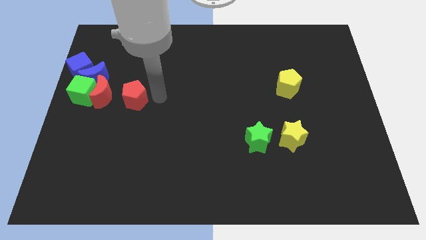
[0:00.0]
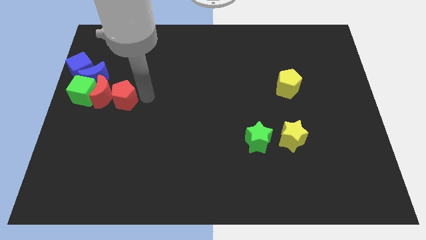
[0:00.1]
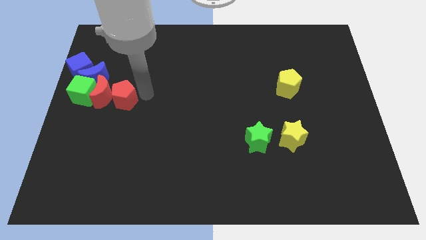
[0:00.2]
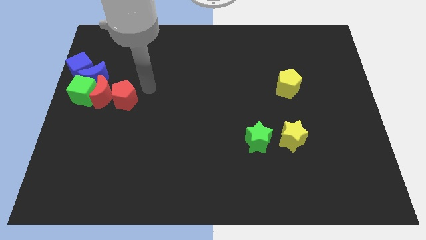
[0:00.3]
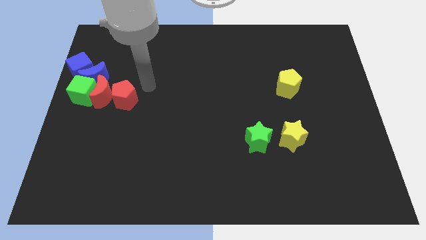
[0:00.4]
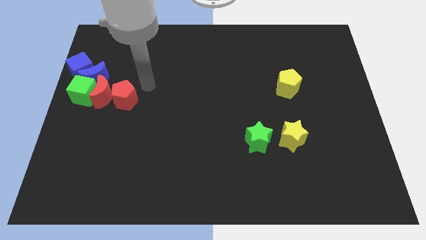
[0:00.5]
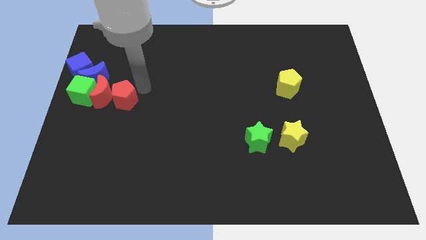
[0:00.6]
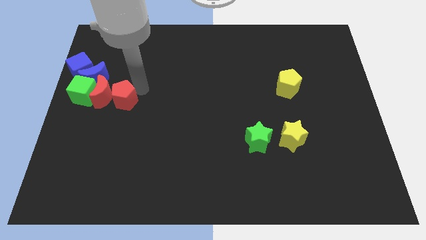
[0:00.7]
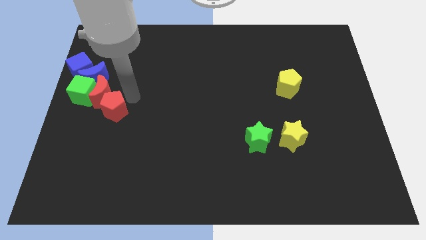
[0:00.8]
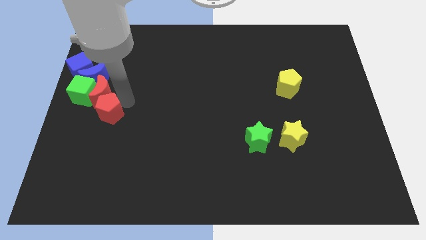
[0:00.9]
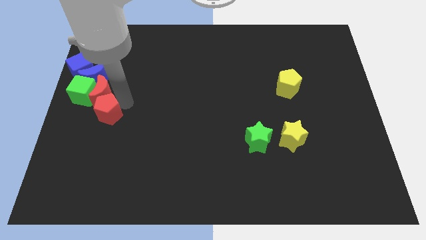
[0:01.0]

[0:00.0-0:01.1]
push the red pentagon into the red moon

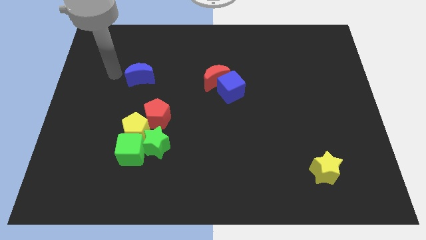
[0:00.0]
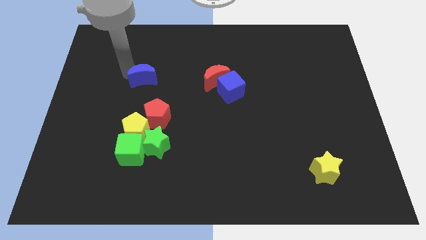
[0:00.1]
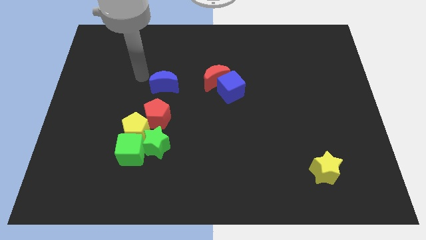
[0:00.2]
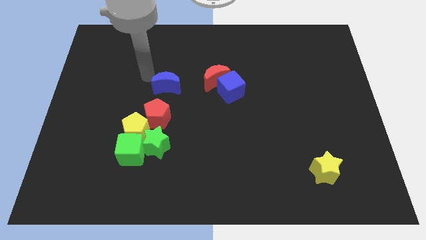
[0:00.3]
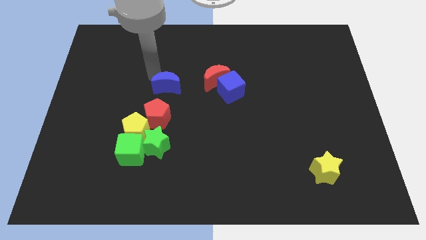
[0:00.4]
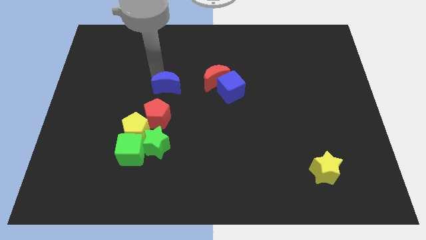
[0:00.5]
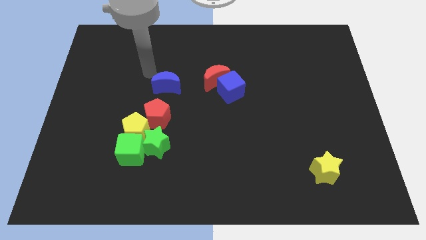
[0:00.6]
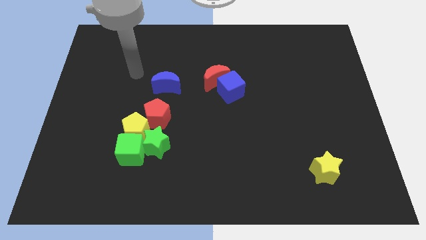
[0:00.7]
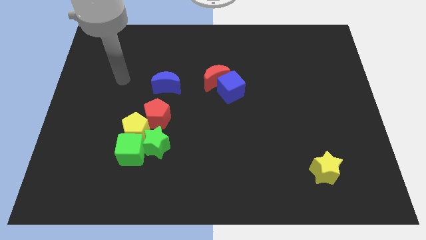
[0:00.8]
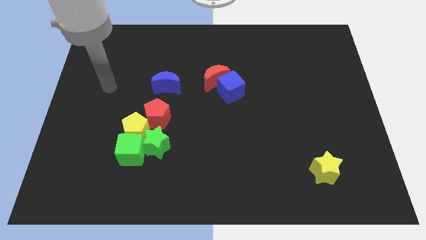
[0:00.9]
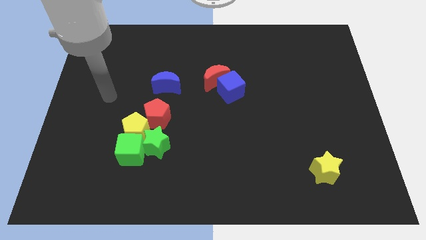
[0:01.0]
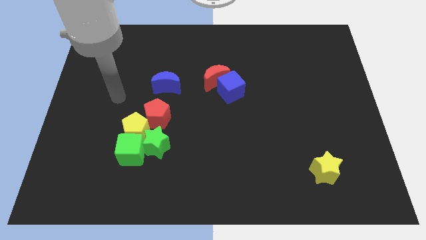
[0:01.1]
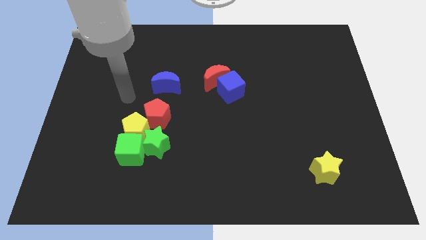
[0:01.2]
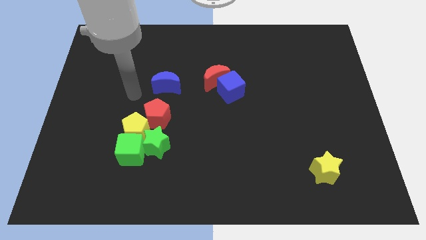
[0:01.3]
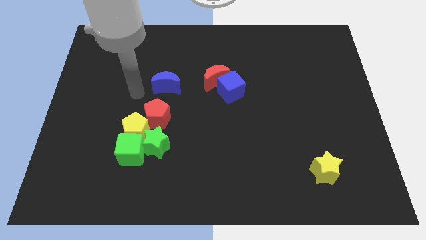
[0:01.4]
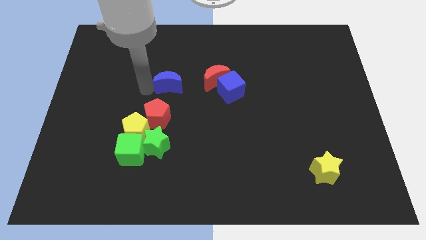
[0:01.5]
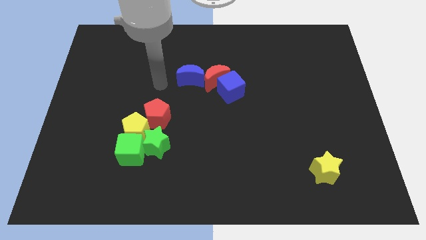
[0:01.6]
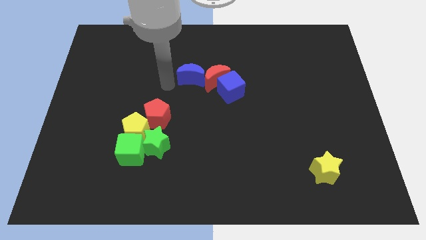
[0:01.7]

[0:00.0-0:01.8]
place the blue crescent left to the red crescent

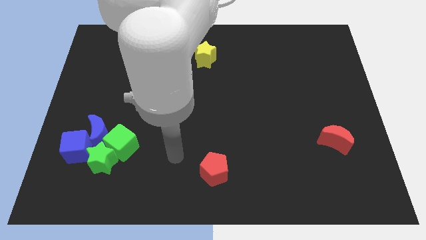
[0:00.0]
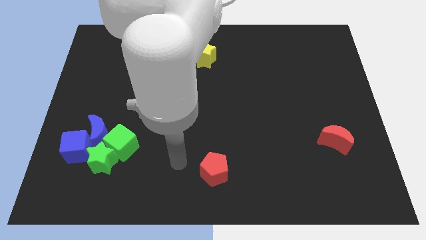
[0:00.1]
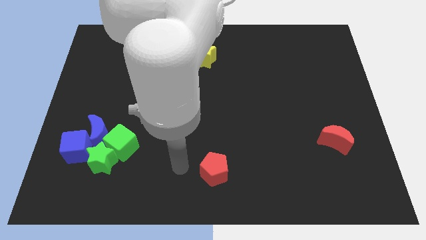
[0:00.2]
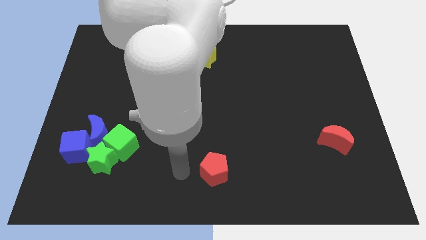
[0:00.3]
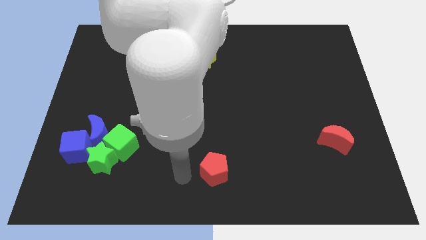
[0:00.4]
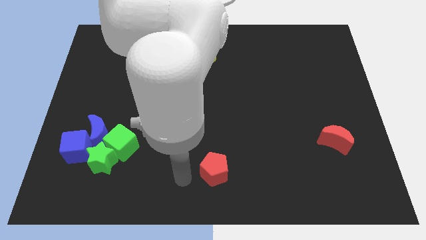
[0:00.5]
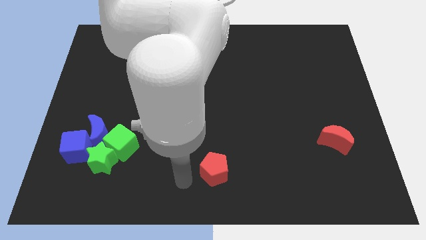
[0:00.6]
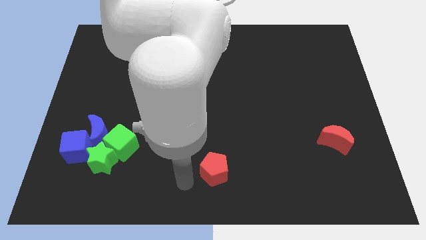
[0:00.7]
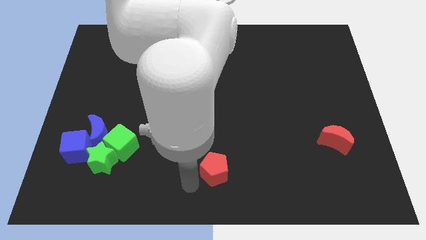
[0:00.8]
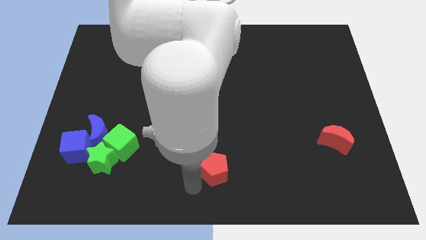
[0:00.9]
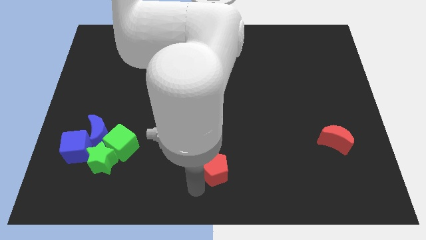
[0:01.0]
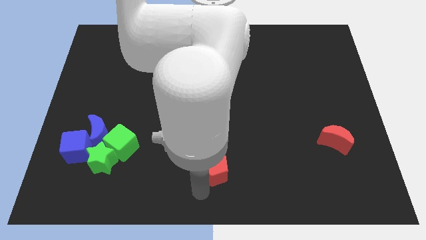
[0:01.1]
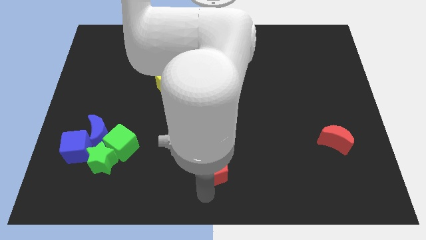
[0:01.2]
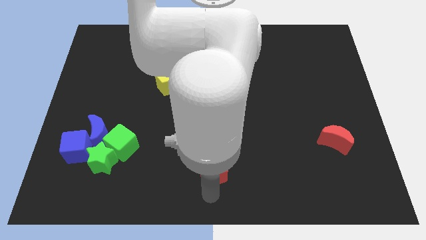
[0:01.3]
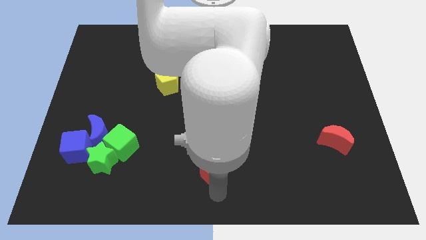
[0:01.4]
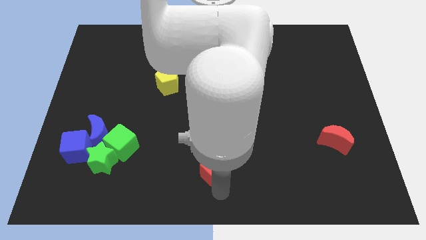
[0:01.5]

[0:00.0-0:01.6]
move arm towards the red pentagon on the bottom center of the board

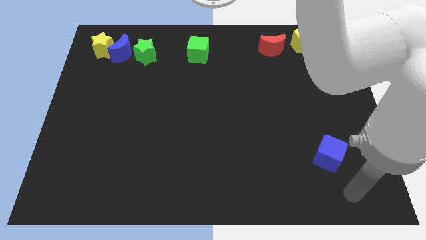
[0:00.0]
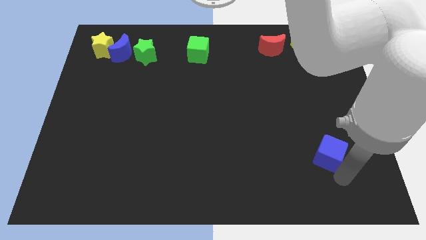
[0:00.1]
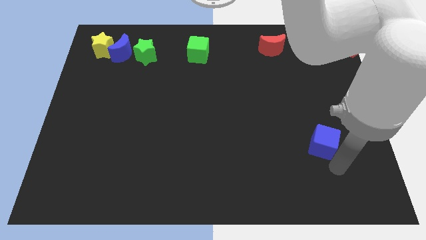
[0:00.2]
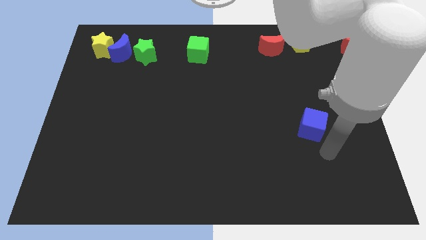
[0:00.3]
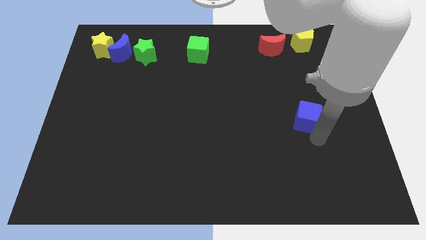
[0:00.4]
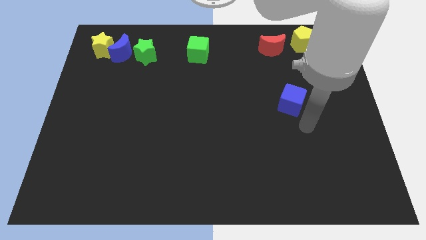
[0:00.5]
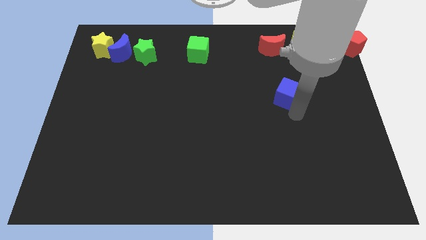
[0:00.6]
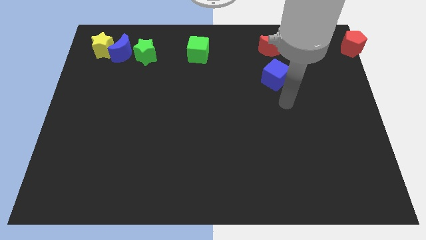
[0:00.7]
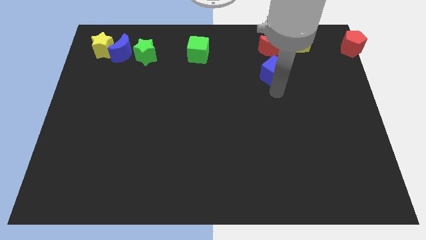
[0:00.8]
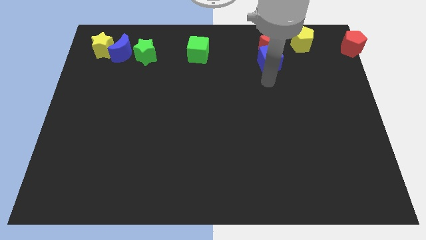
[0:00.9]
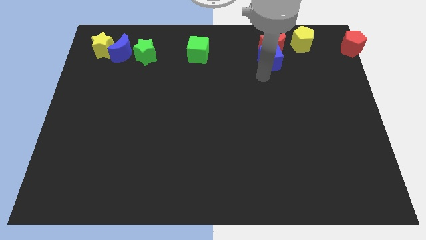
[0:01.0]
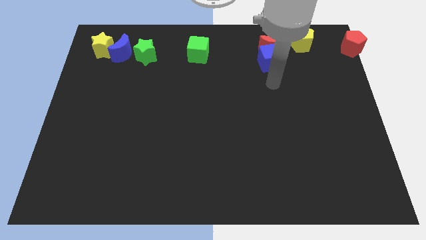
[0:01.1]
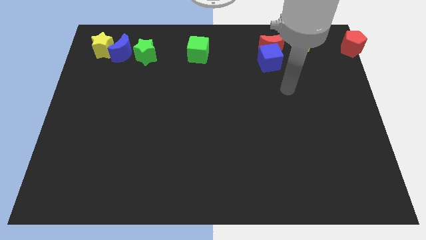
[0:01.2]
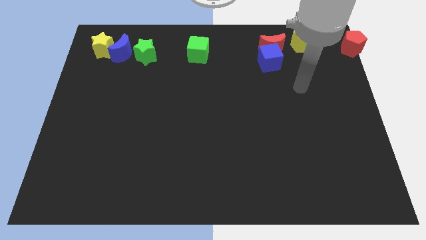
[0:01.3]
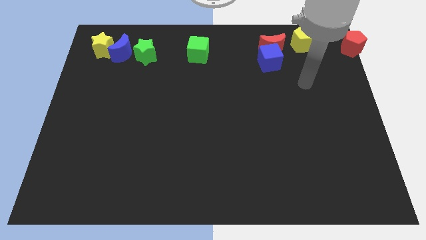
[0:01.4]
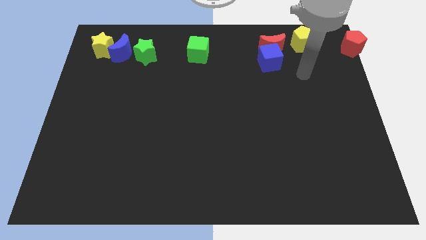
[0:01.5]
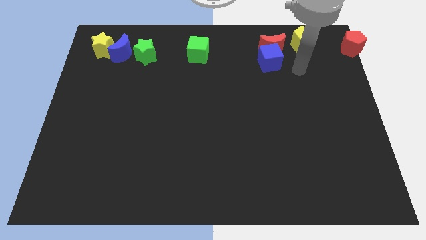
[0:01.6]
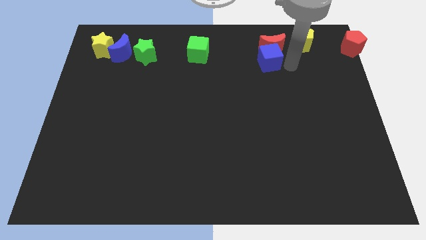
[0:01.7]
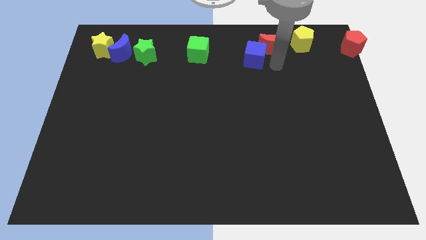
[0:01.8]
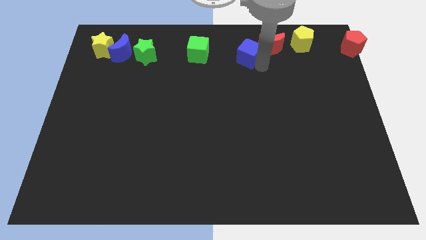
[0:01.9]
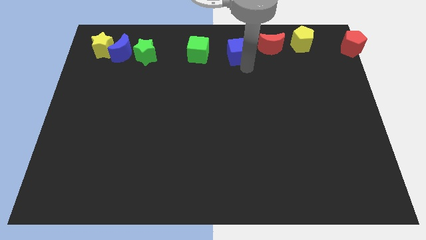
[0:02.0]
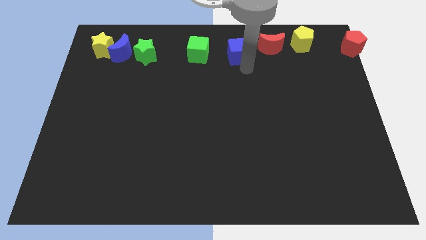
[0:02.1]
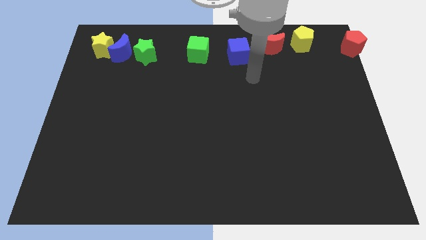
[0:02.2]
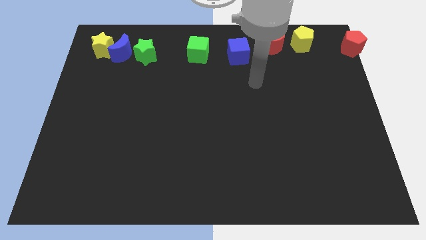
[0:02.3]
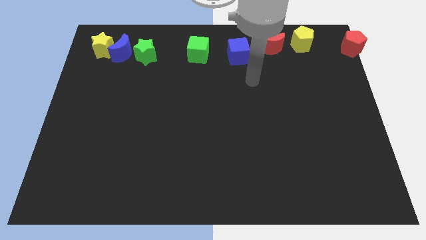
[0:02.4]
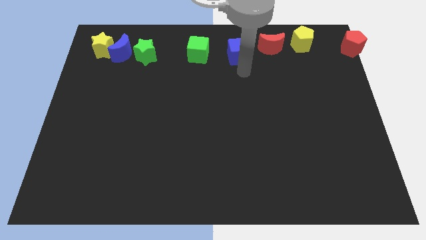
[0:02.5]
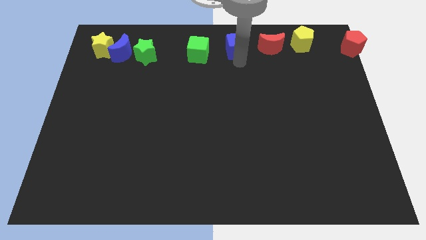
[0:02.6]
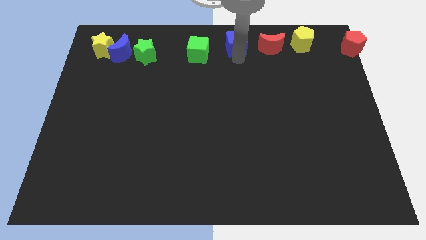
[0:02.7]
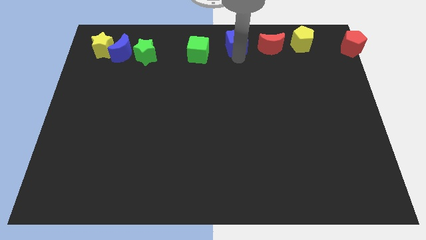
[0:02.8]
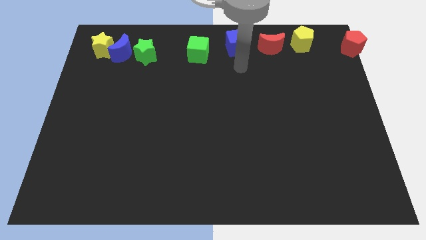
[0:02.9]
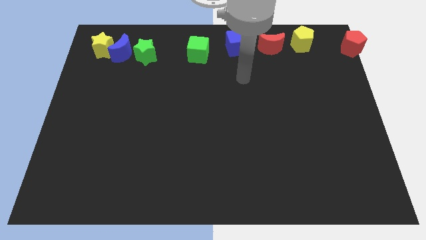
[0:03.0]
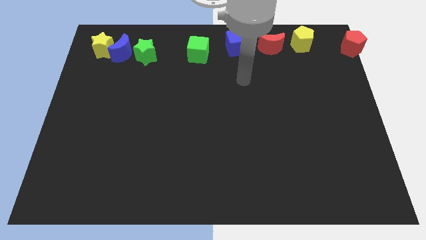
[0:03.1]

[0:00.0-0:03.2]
move the blue cube to the left of the red crescent

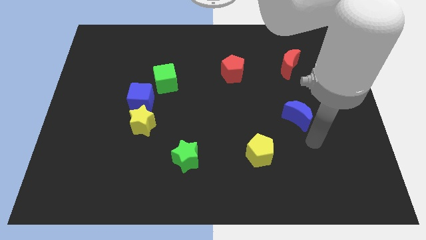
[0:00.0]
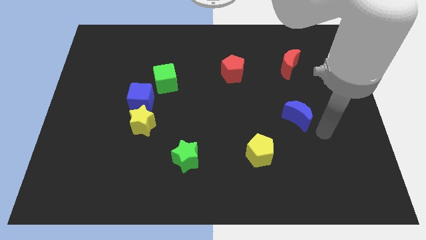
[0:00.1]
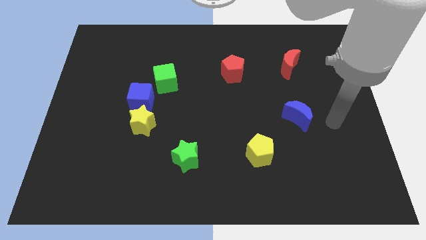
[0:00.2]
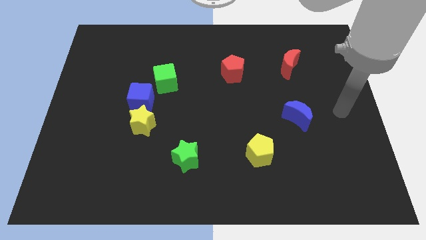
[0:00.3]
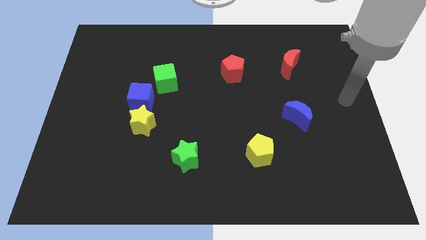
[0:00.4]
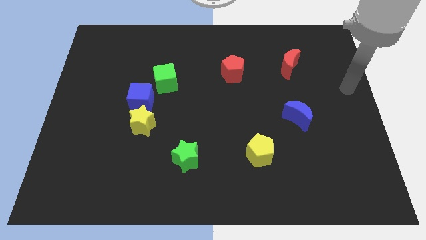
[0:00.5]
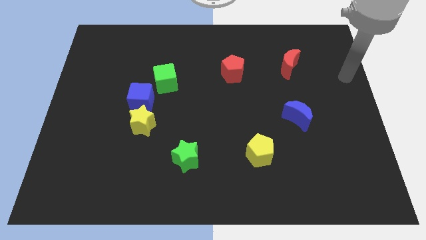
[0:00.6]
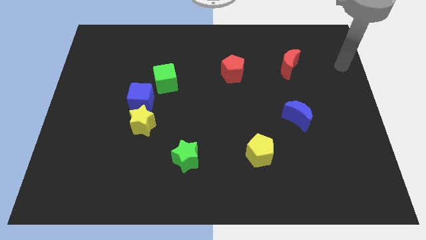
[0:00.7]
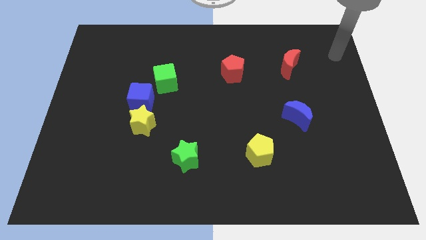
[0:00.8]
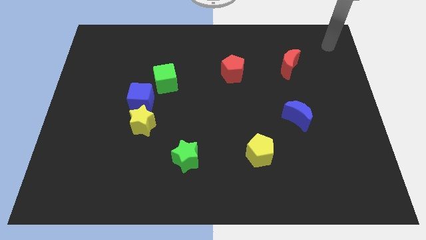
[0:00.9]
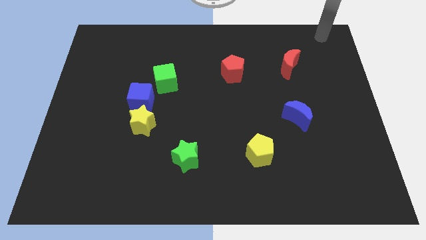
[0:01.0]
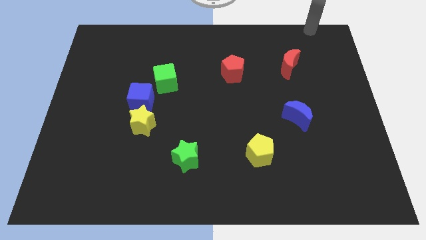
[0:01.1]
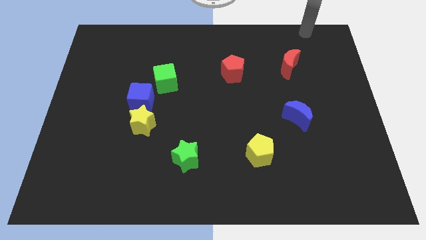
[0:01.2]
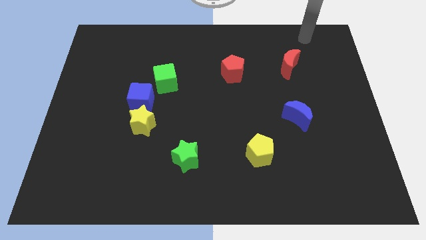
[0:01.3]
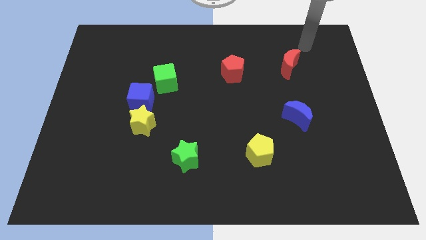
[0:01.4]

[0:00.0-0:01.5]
point your arm above red moon
